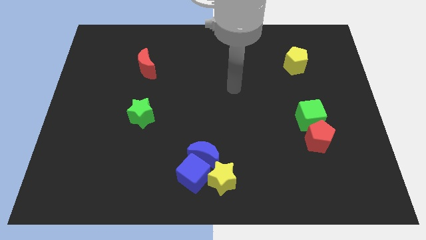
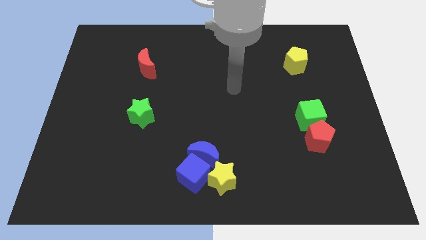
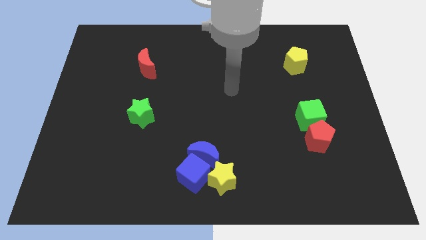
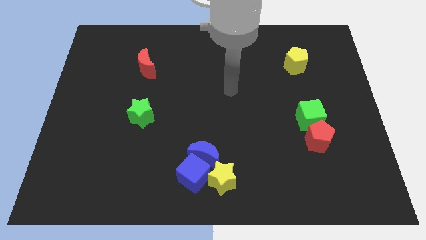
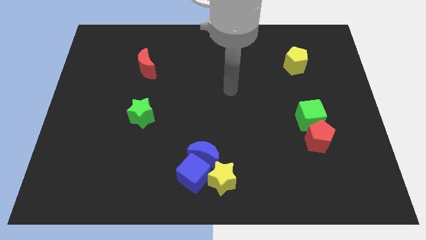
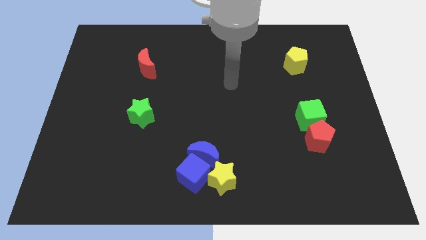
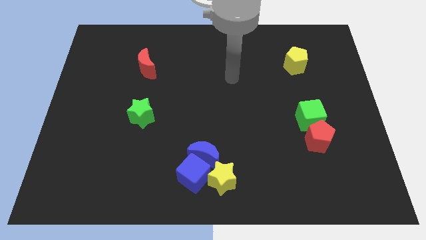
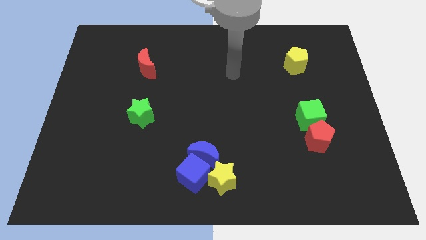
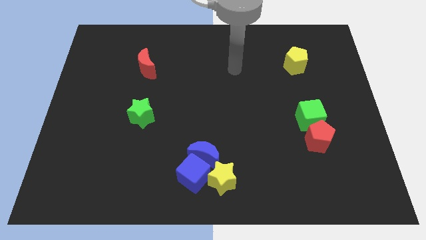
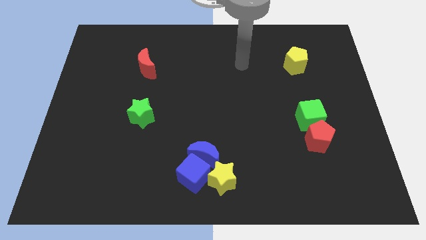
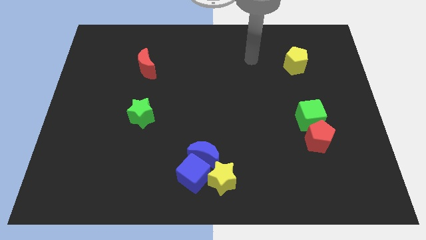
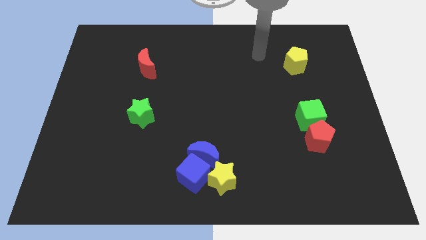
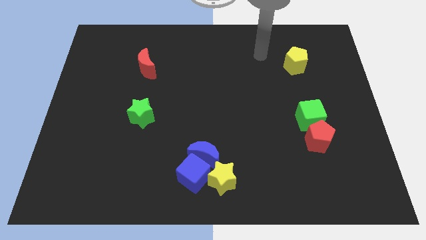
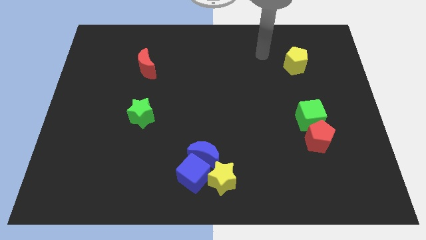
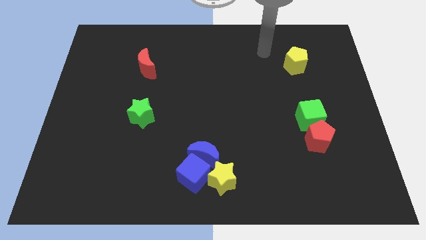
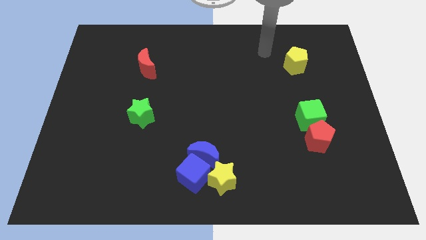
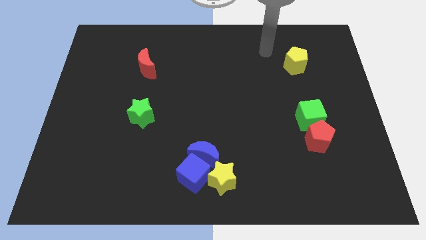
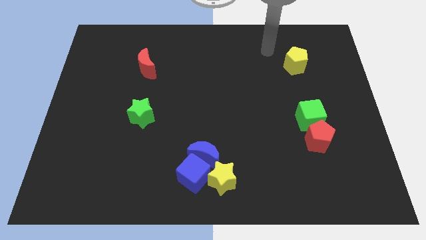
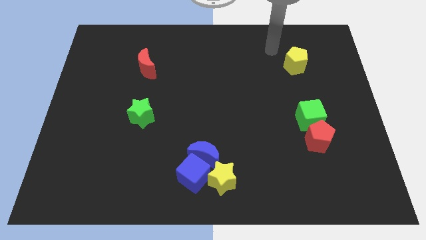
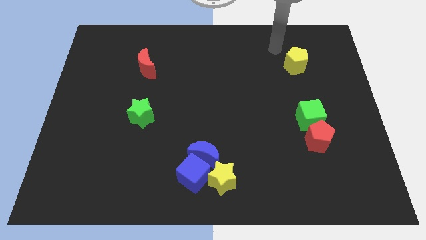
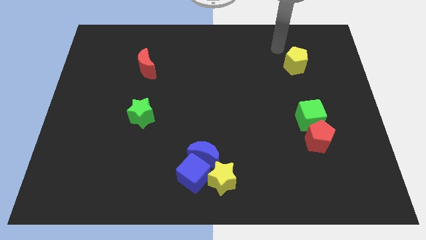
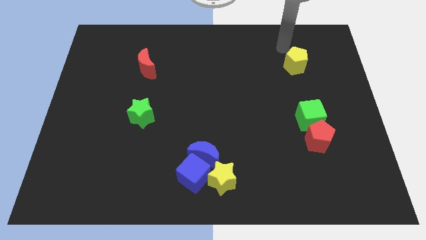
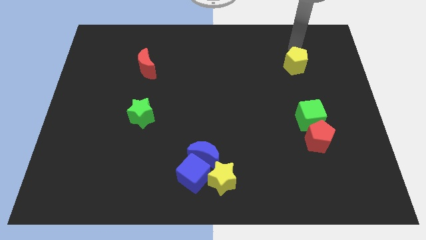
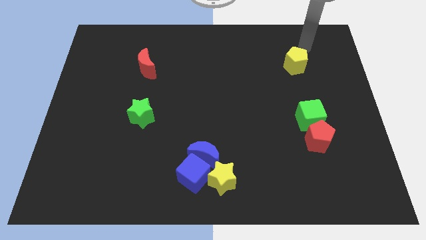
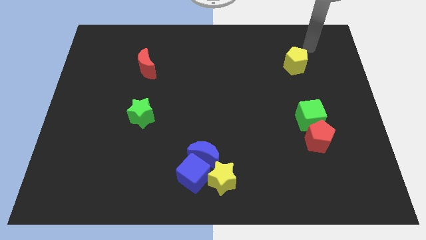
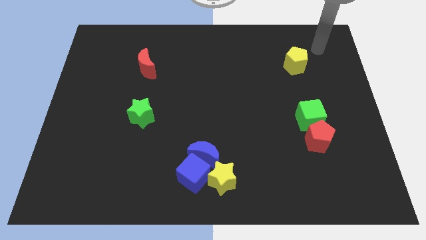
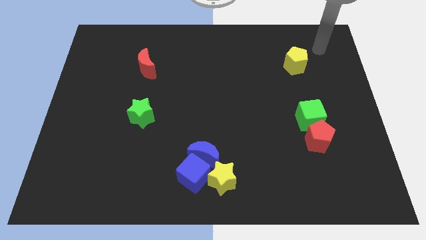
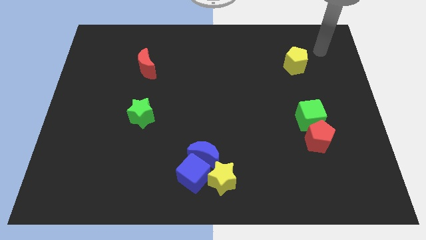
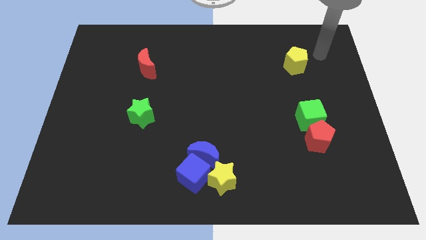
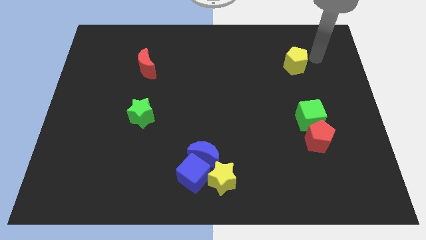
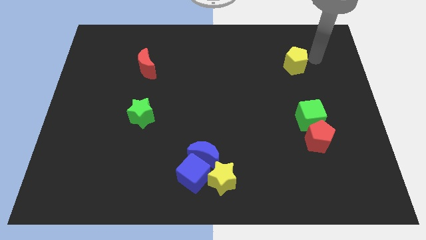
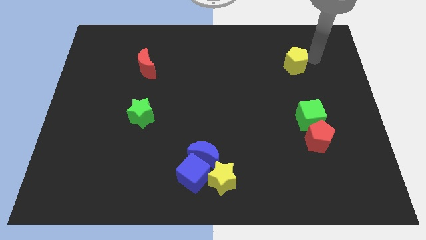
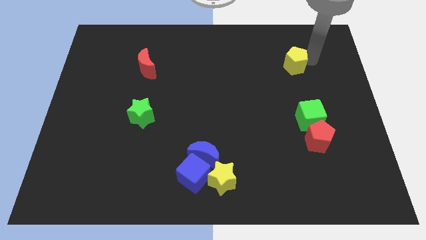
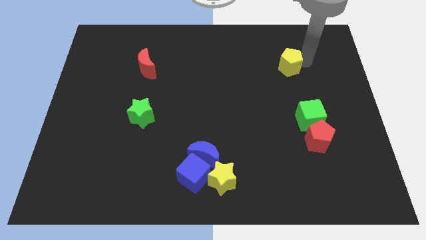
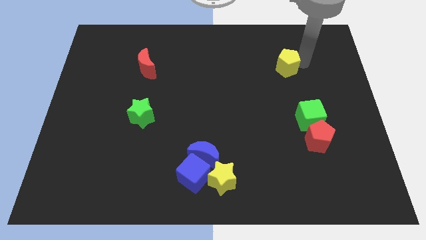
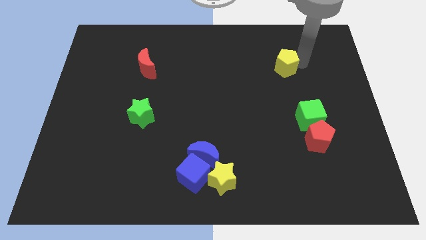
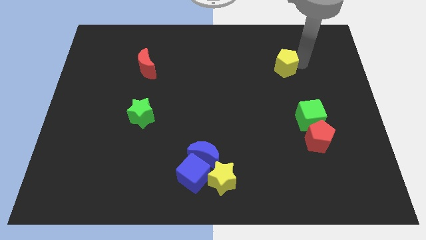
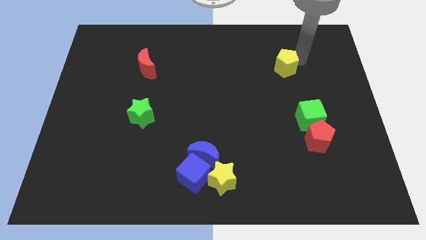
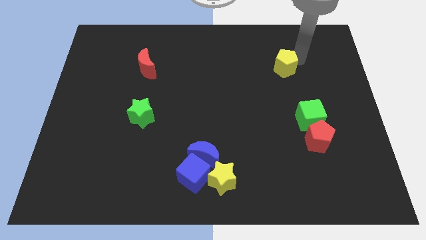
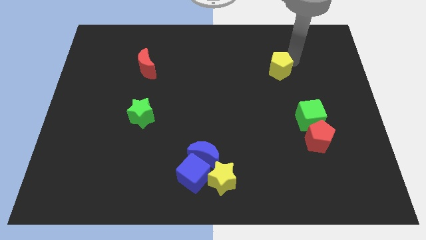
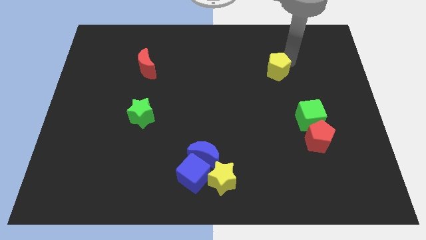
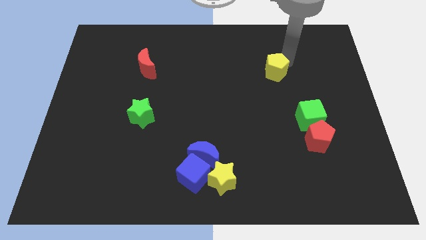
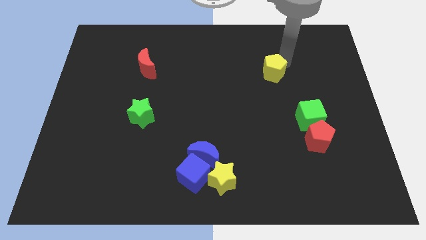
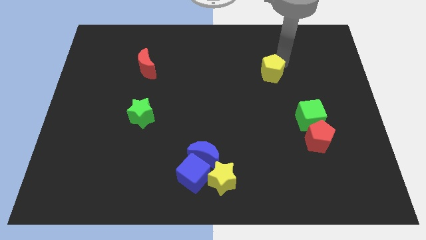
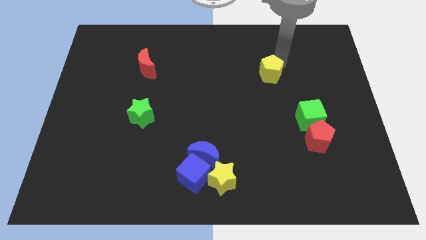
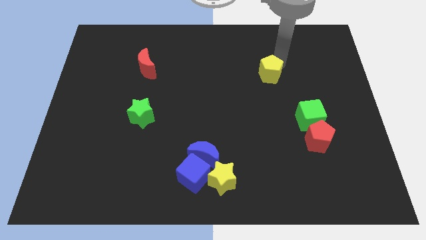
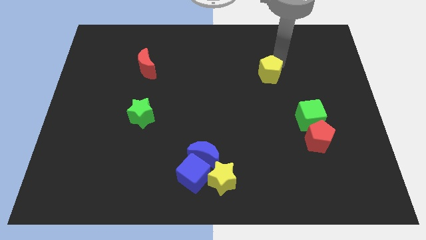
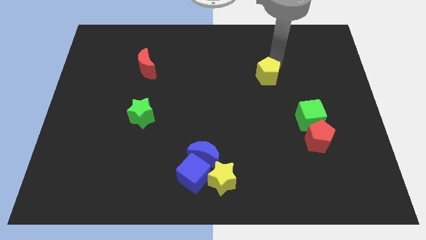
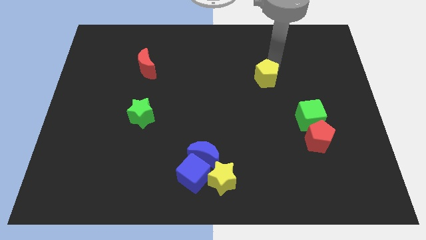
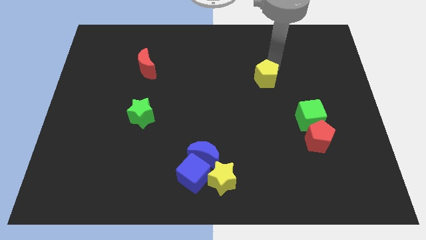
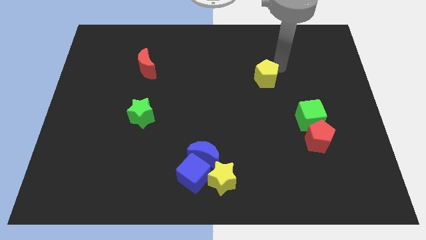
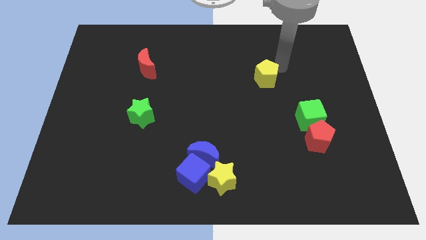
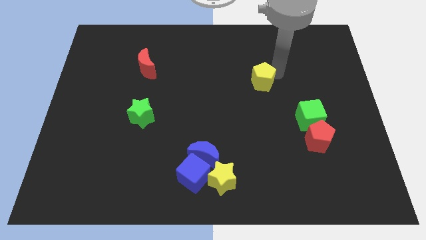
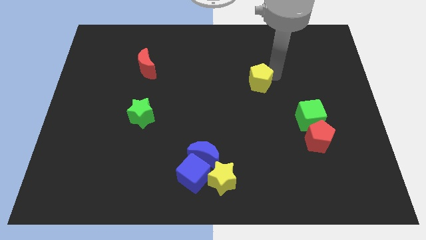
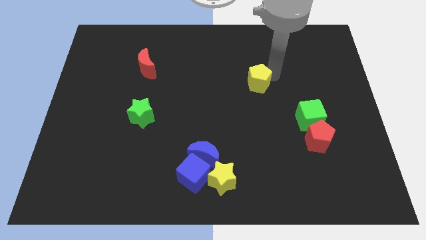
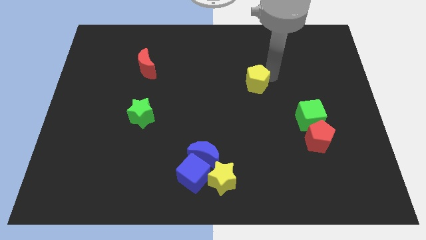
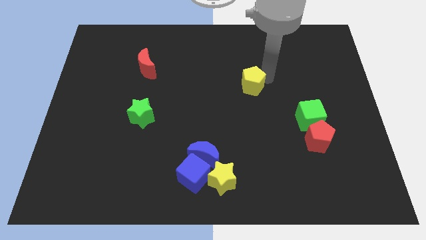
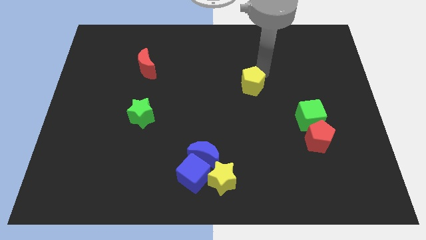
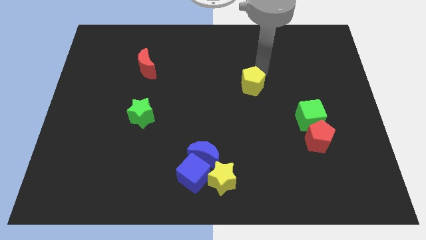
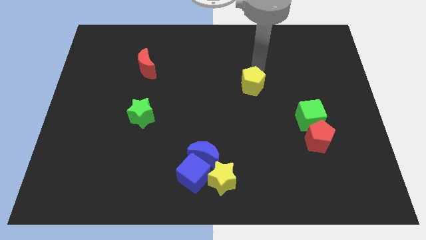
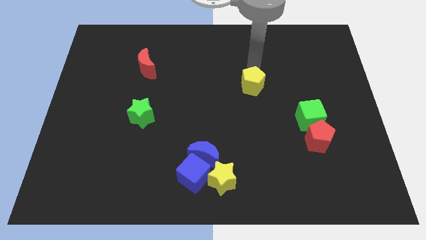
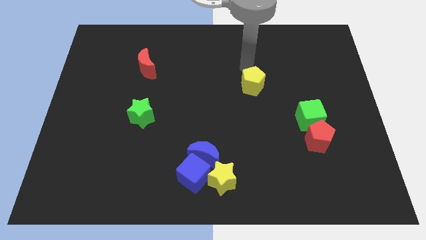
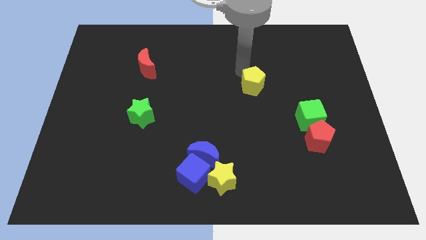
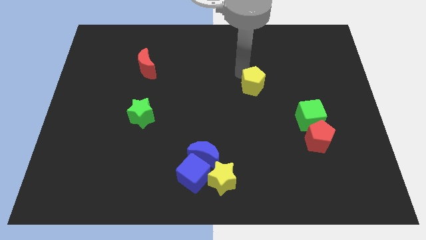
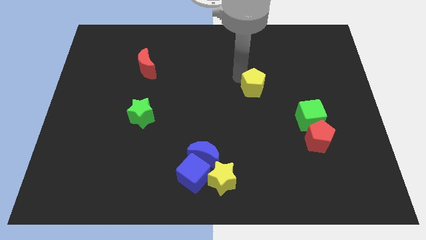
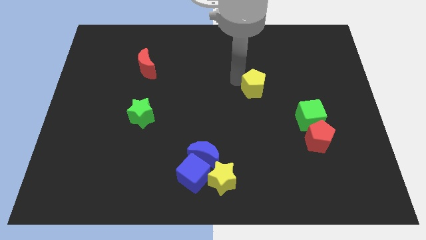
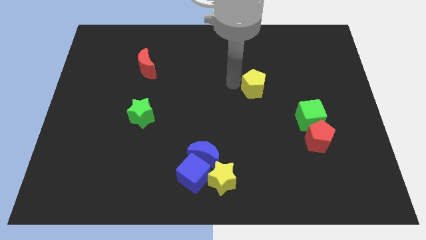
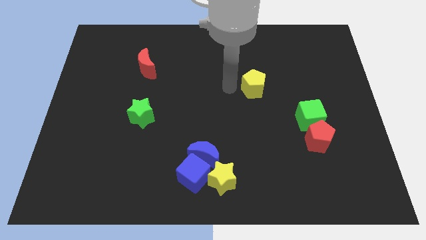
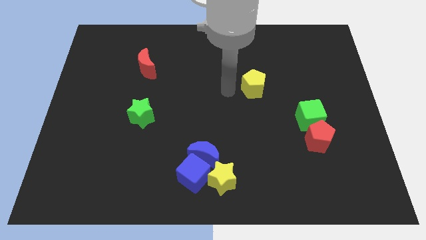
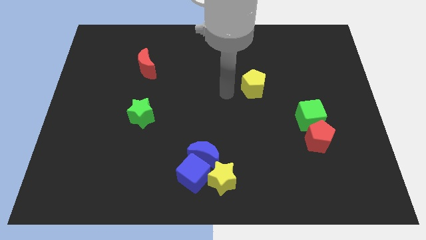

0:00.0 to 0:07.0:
put the yellow pentagon at the top left side of the green cube

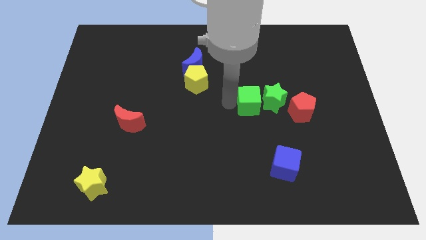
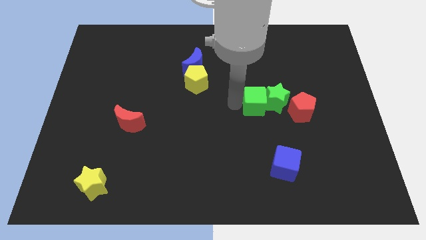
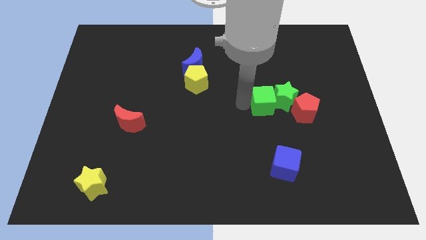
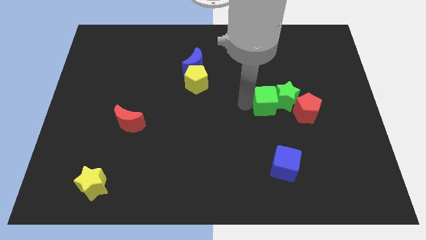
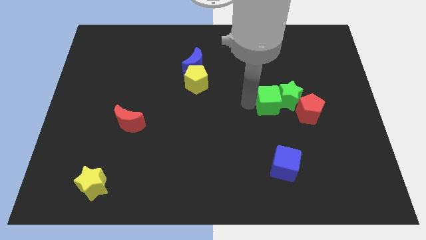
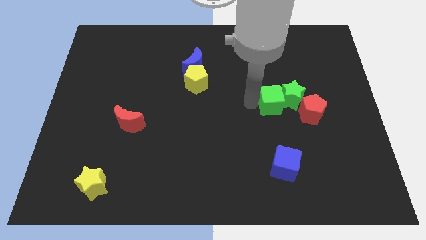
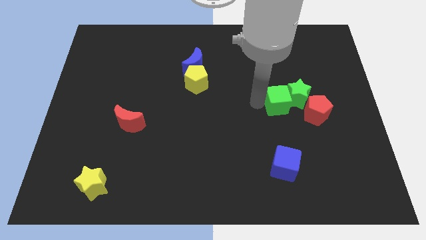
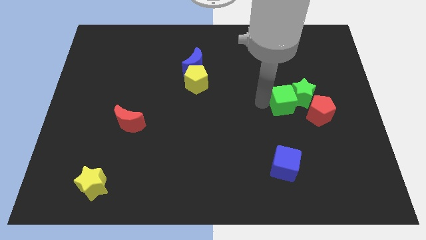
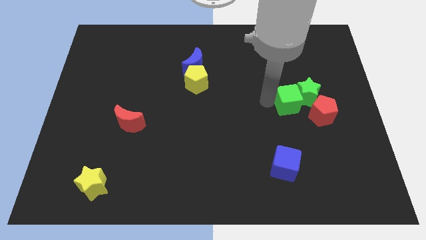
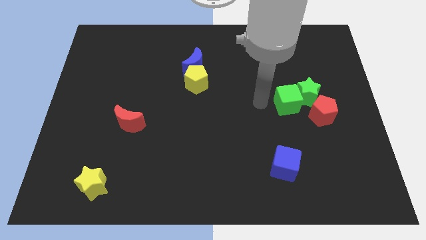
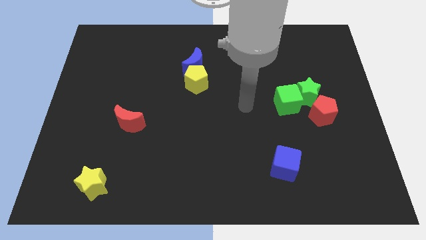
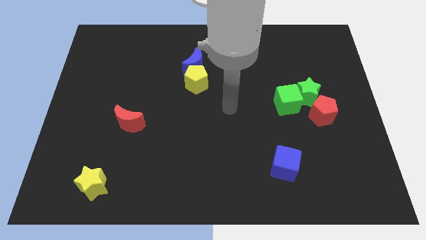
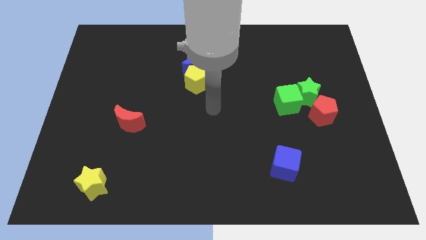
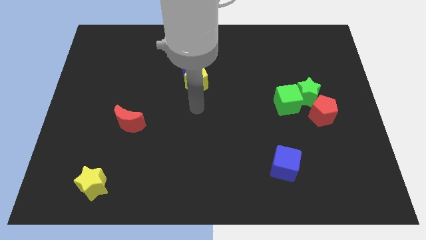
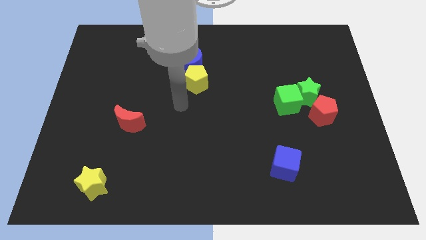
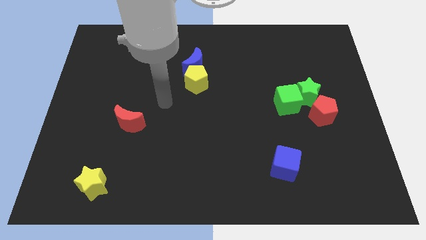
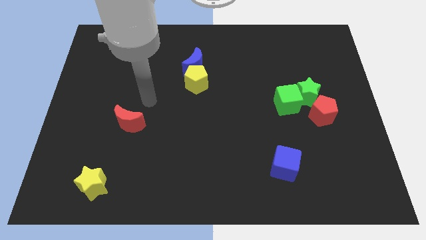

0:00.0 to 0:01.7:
push the green star into the red pentagon

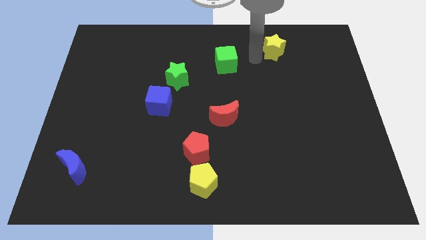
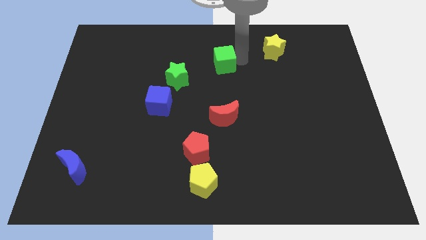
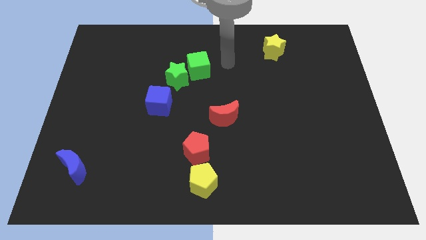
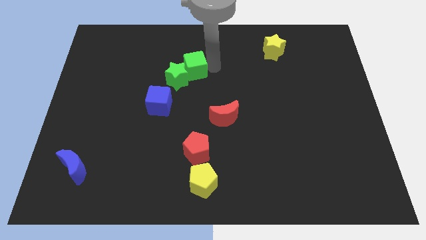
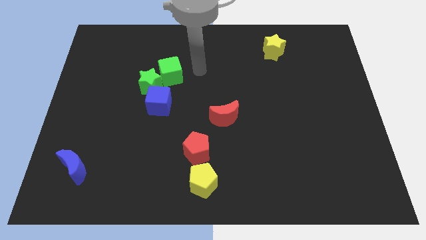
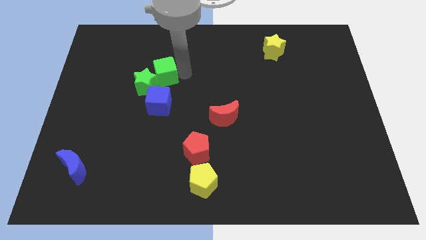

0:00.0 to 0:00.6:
push the green cube into the green star
